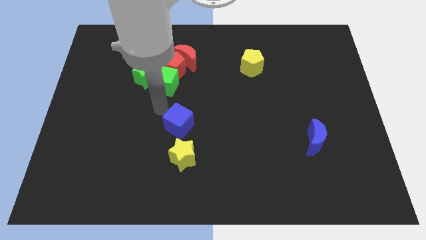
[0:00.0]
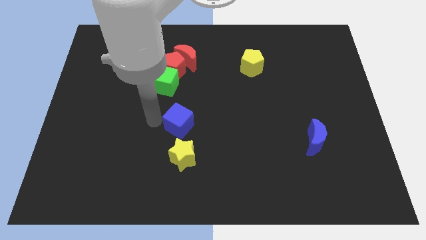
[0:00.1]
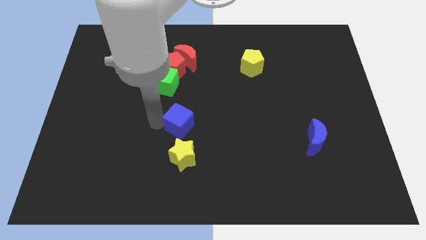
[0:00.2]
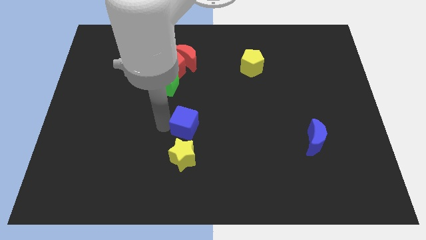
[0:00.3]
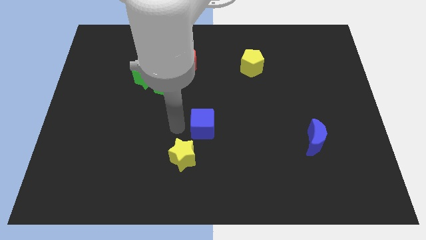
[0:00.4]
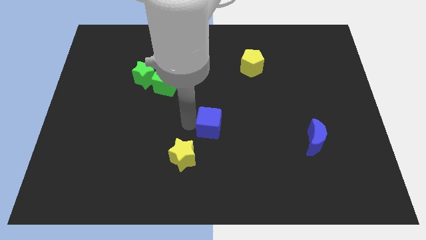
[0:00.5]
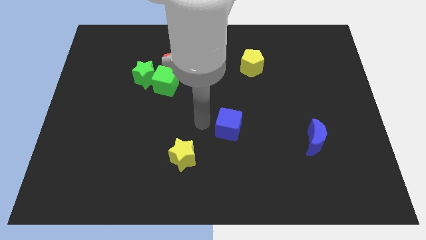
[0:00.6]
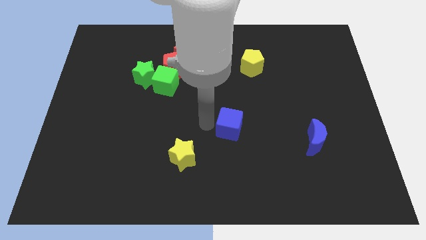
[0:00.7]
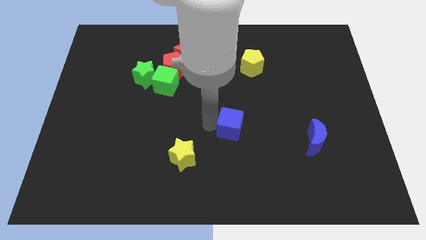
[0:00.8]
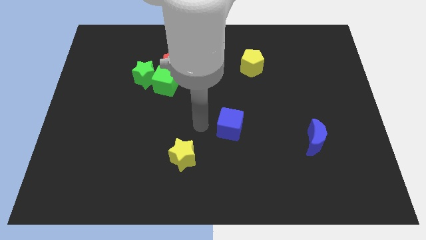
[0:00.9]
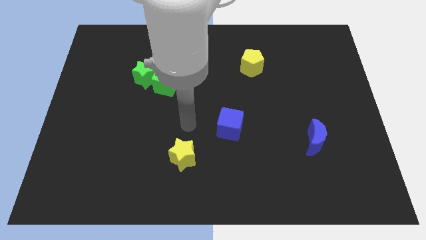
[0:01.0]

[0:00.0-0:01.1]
move the blue cube towards the blue moon

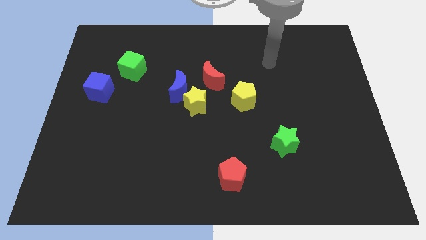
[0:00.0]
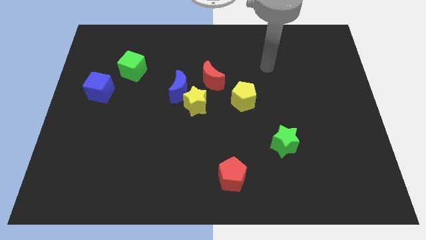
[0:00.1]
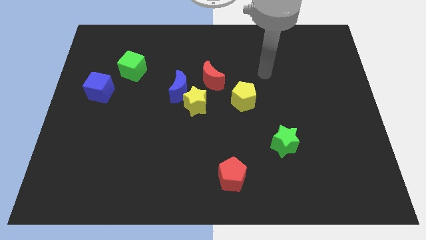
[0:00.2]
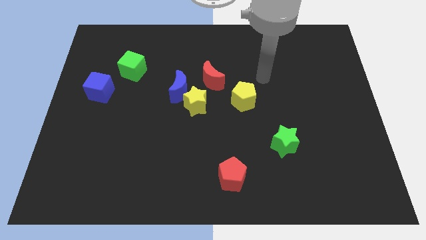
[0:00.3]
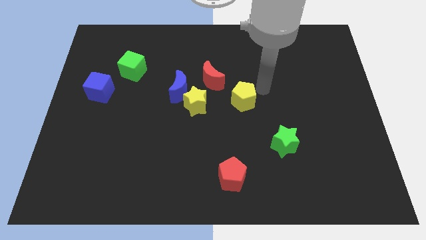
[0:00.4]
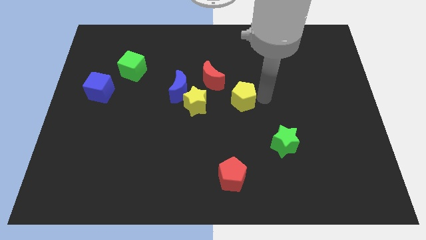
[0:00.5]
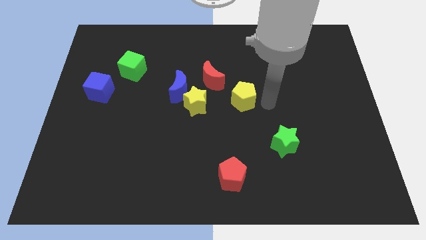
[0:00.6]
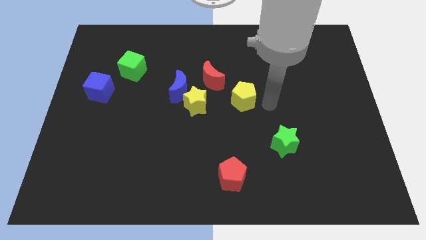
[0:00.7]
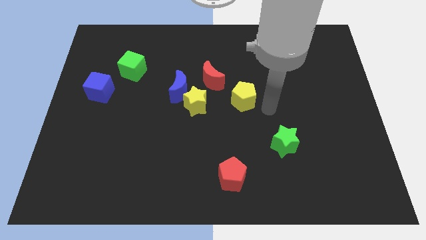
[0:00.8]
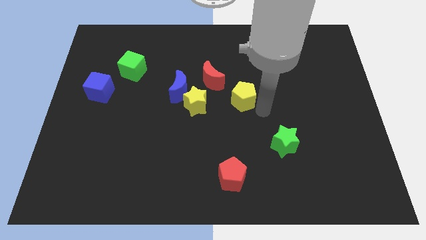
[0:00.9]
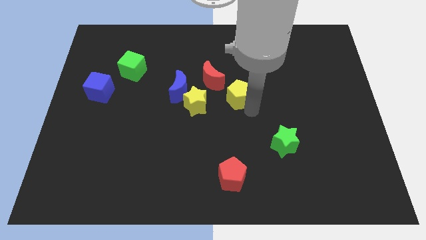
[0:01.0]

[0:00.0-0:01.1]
slightly push the yellow pentagon towards the red crescent

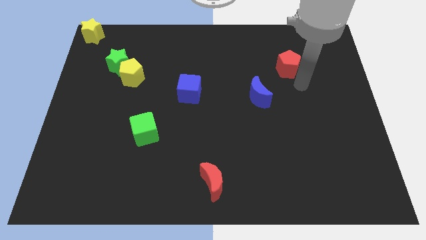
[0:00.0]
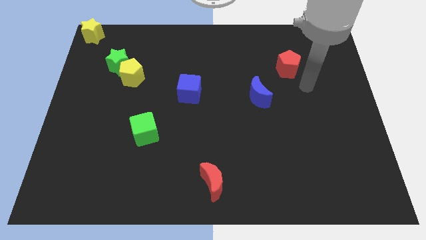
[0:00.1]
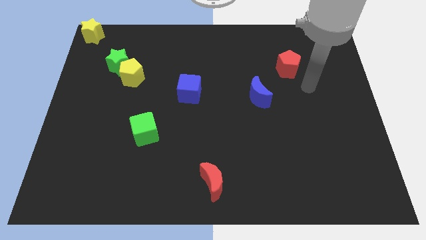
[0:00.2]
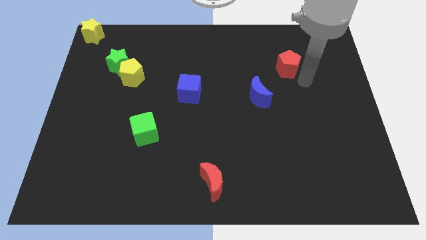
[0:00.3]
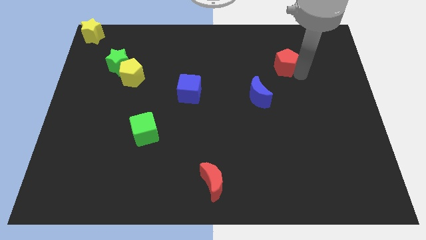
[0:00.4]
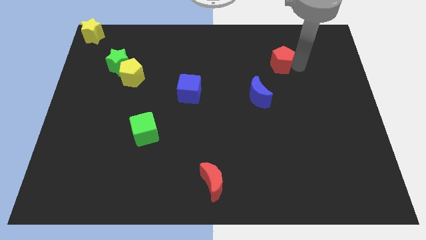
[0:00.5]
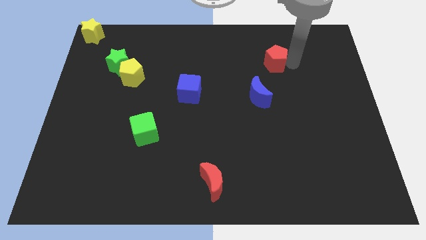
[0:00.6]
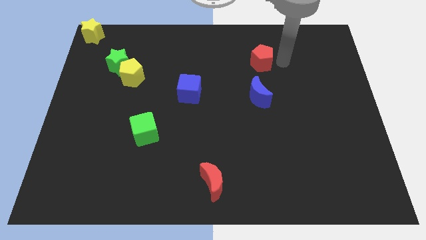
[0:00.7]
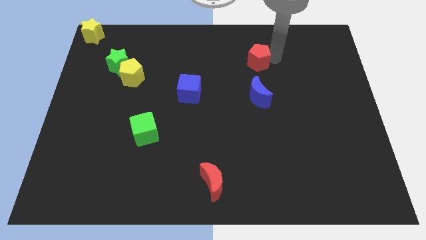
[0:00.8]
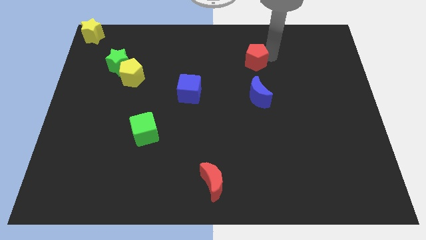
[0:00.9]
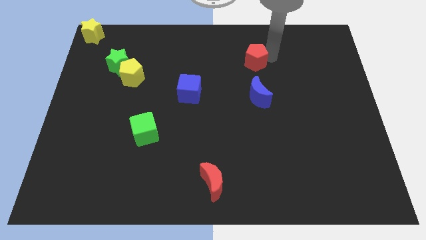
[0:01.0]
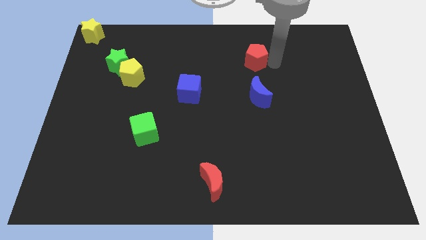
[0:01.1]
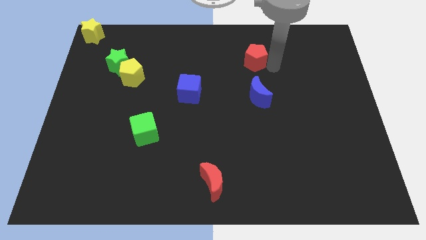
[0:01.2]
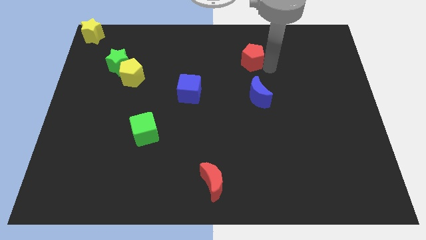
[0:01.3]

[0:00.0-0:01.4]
place the red pentagon on top of the blue crescent

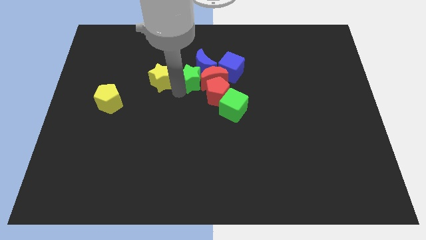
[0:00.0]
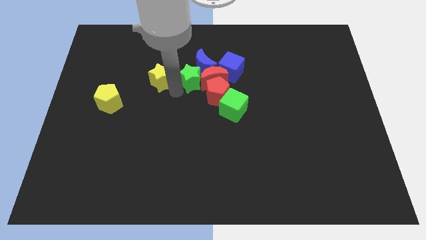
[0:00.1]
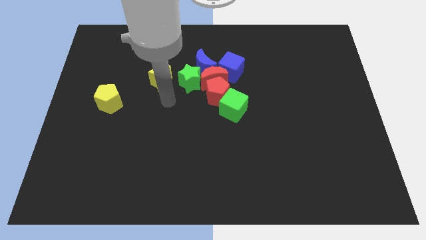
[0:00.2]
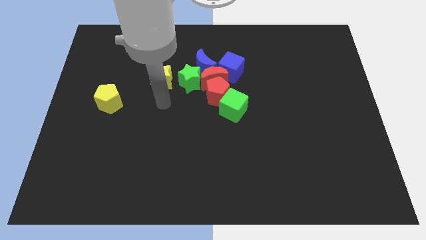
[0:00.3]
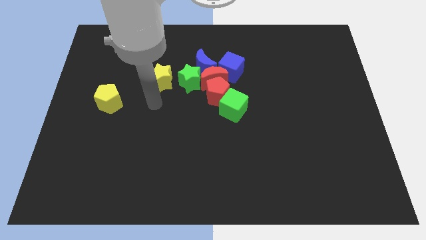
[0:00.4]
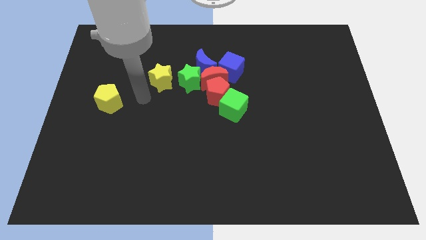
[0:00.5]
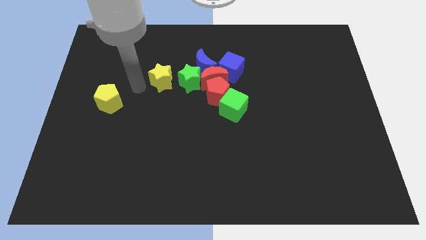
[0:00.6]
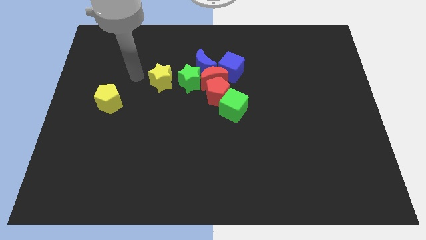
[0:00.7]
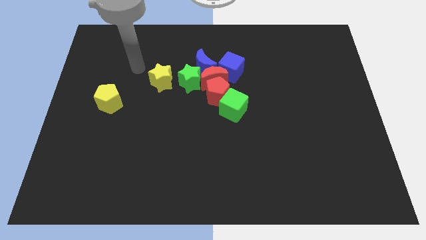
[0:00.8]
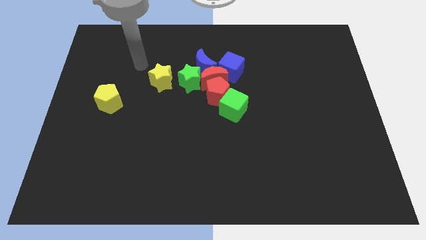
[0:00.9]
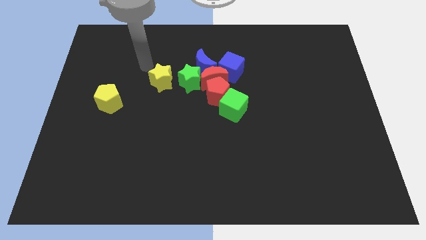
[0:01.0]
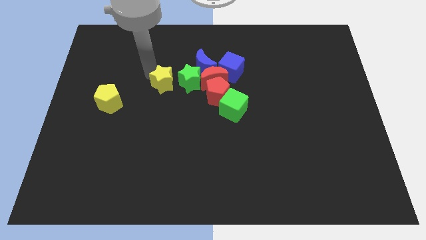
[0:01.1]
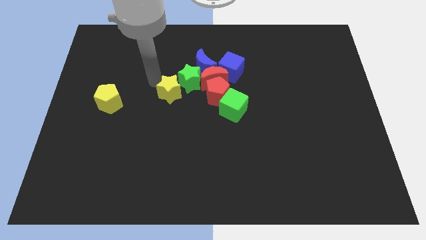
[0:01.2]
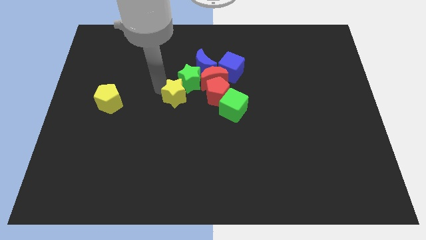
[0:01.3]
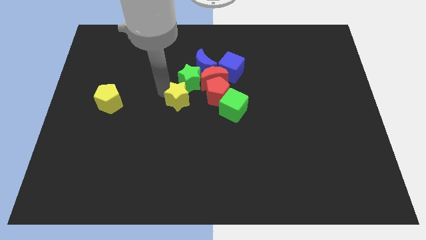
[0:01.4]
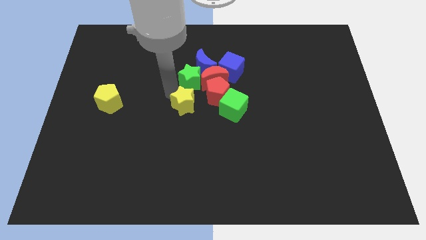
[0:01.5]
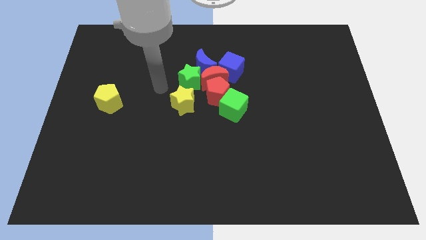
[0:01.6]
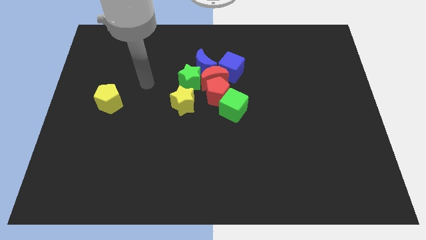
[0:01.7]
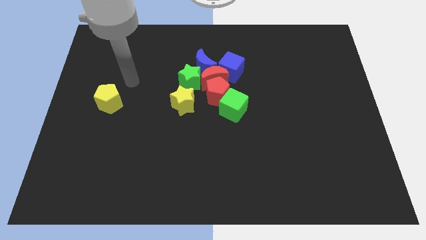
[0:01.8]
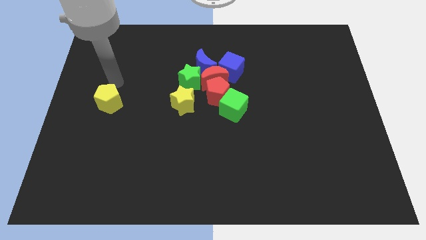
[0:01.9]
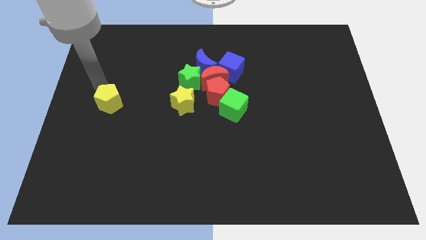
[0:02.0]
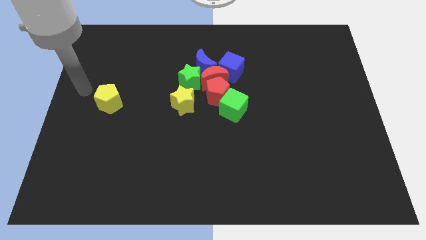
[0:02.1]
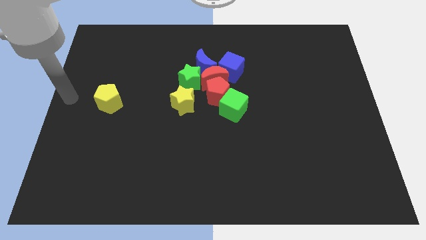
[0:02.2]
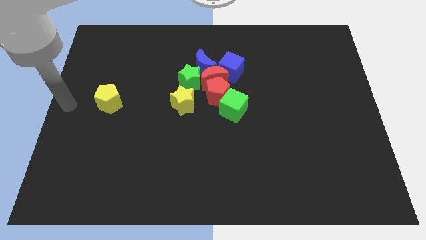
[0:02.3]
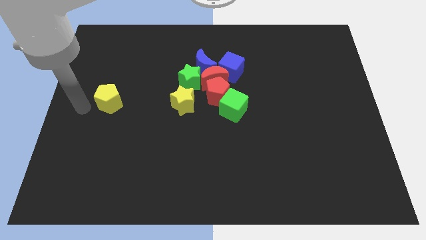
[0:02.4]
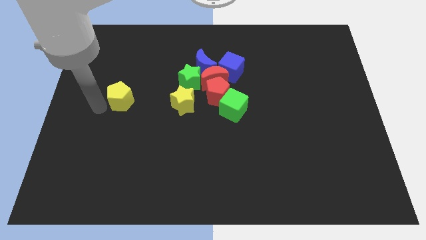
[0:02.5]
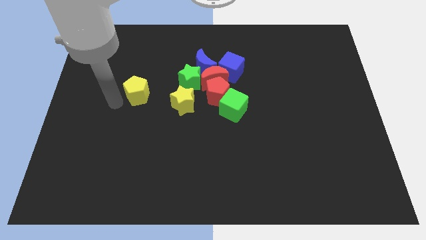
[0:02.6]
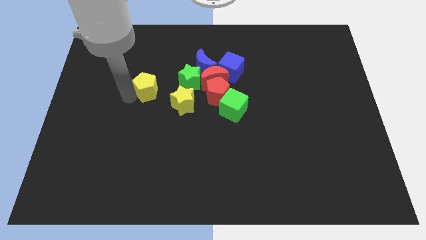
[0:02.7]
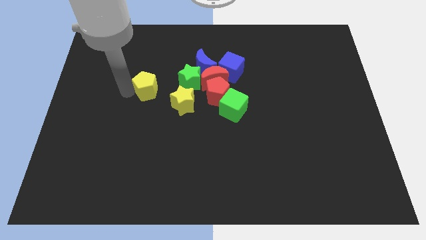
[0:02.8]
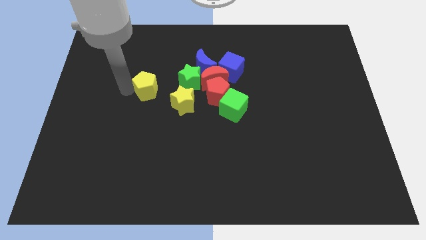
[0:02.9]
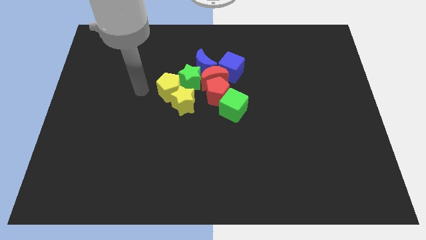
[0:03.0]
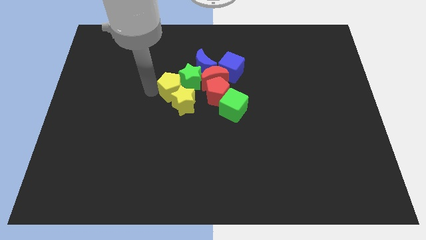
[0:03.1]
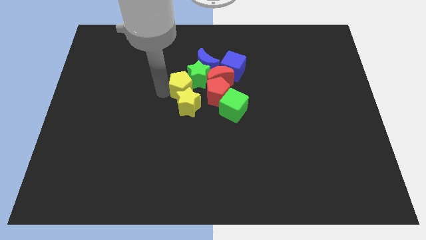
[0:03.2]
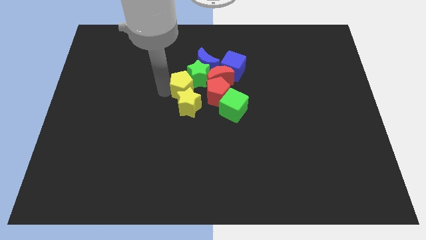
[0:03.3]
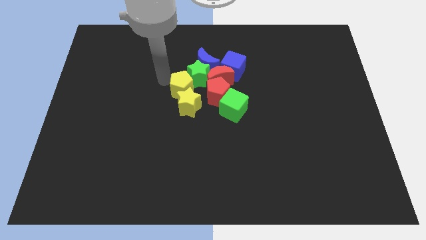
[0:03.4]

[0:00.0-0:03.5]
place the yellow pentagon towards the bottom left side of the green star

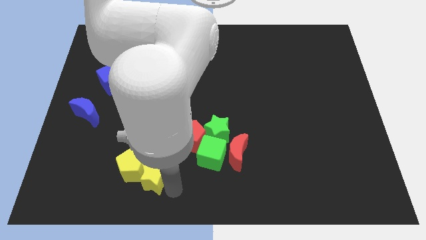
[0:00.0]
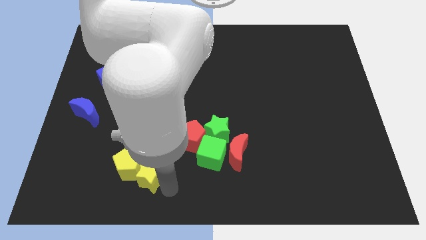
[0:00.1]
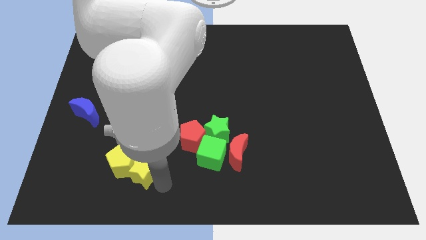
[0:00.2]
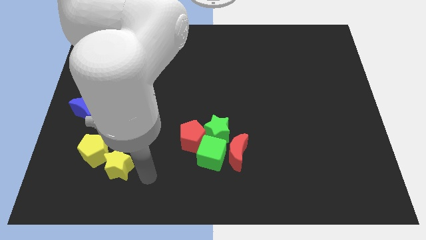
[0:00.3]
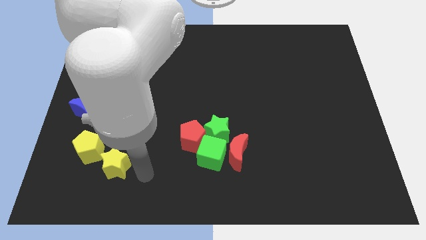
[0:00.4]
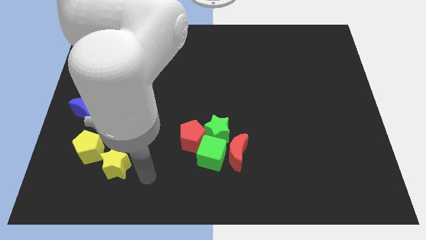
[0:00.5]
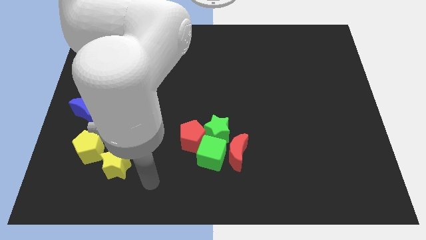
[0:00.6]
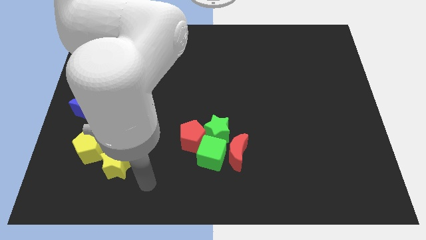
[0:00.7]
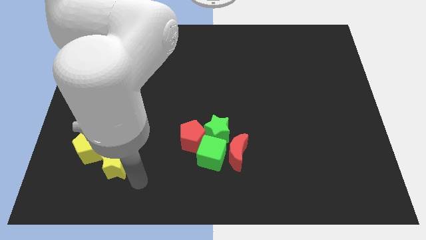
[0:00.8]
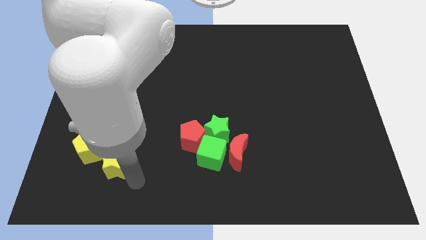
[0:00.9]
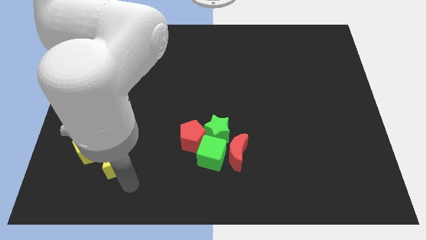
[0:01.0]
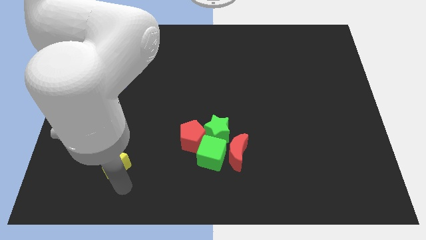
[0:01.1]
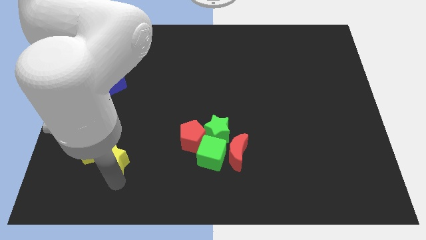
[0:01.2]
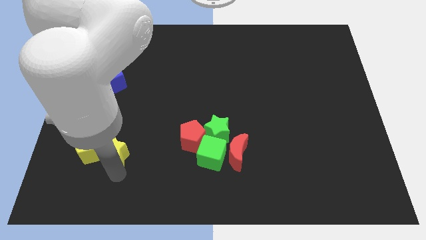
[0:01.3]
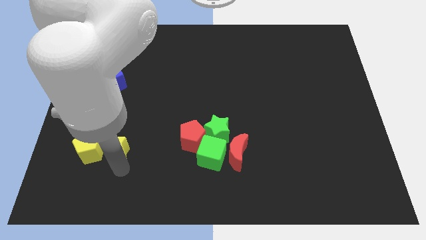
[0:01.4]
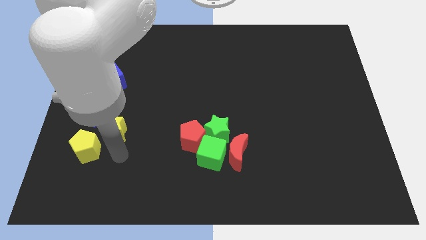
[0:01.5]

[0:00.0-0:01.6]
move the yellow blocks towards the blue moon
